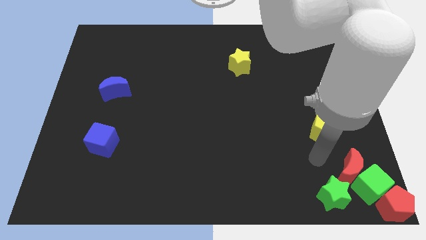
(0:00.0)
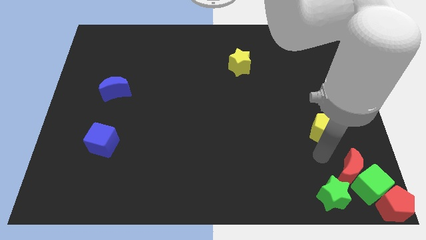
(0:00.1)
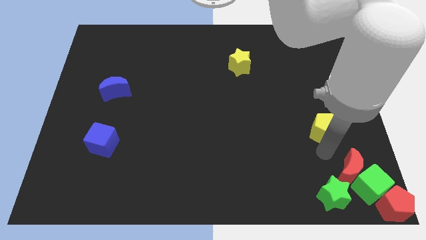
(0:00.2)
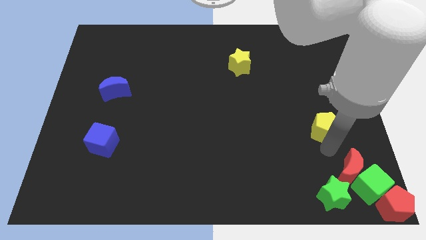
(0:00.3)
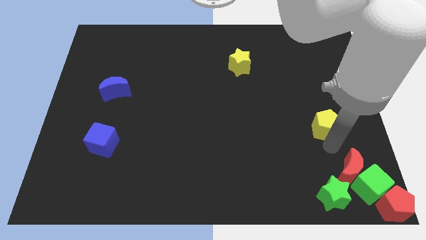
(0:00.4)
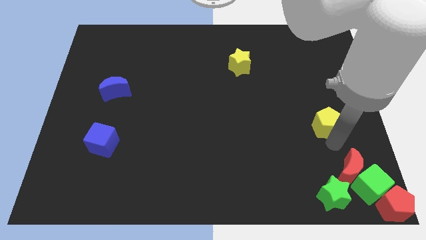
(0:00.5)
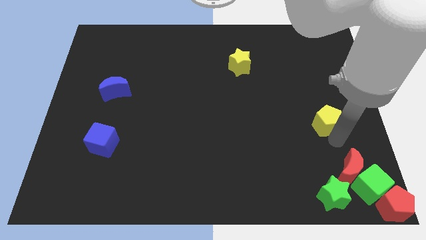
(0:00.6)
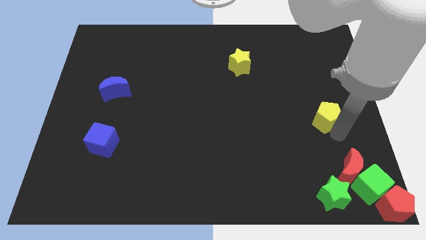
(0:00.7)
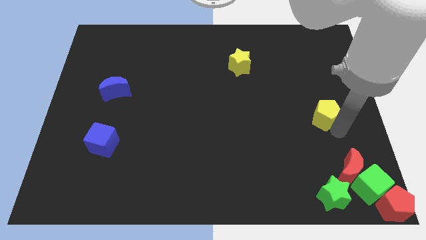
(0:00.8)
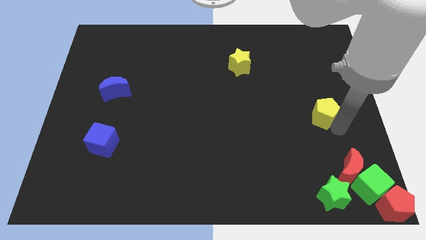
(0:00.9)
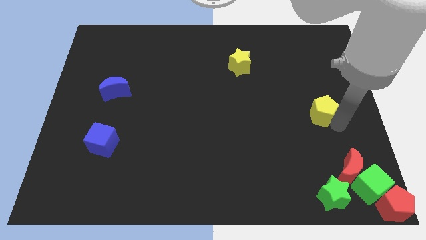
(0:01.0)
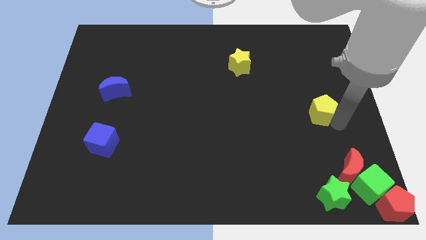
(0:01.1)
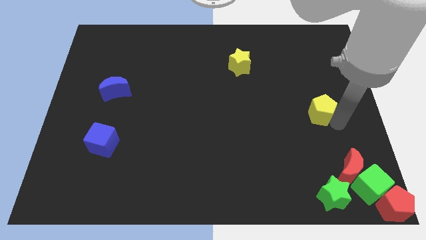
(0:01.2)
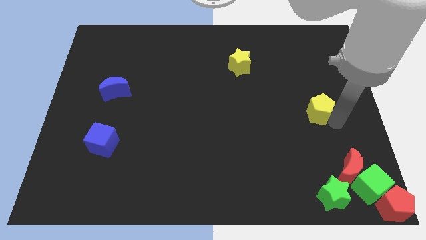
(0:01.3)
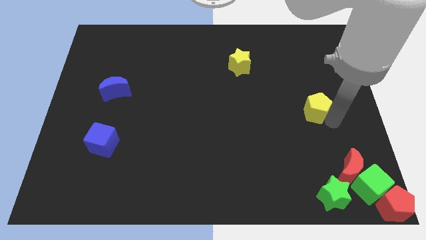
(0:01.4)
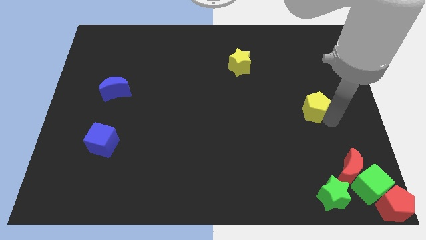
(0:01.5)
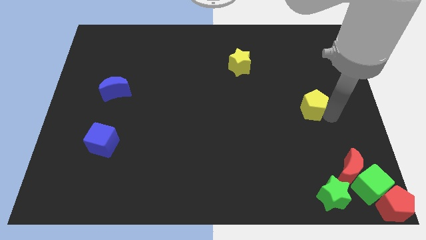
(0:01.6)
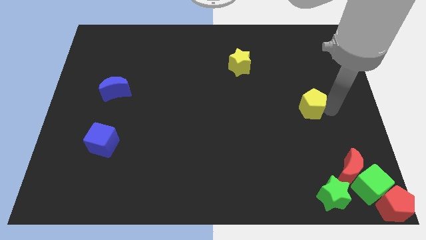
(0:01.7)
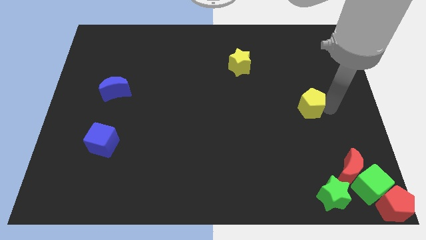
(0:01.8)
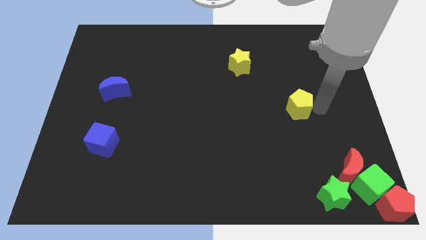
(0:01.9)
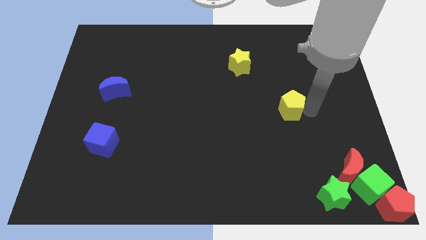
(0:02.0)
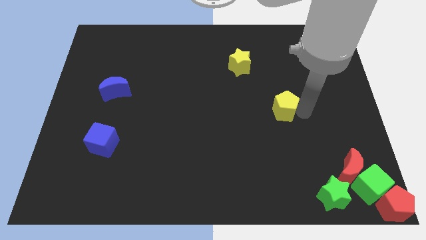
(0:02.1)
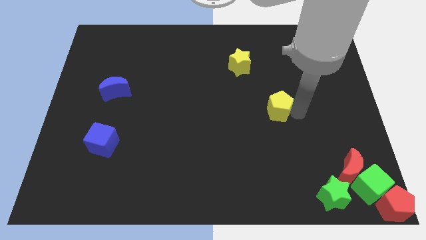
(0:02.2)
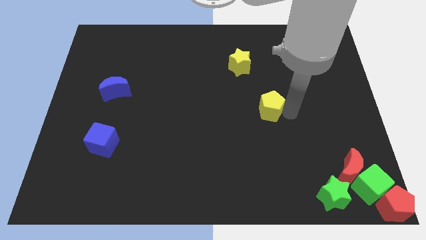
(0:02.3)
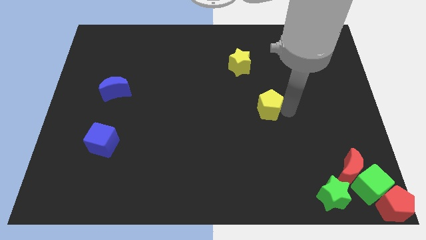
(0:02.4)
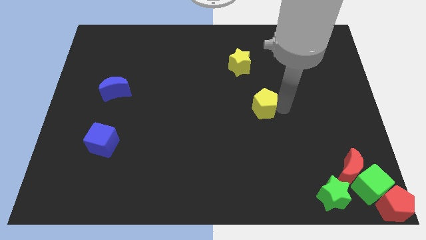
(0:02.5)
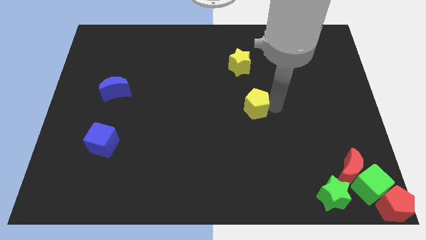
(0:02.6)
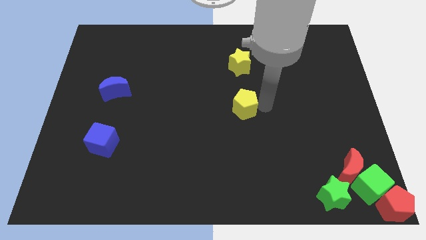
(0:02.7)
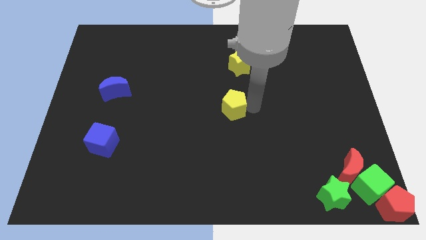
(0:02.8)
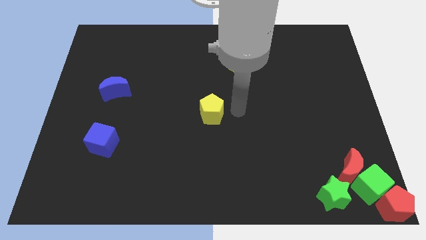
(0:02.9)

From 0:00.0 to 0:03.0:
push the yellow pentagon towards the center of the board

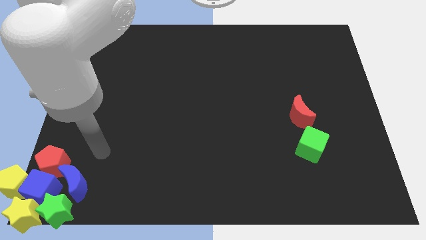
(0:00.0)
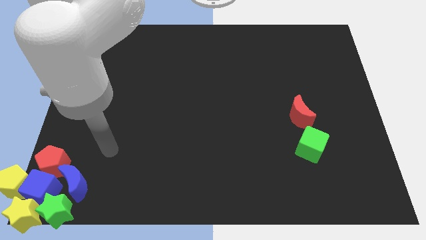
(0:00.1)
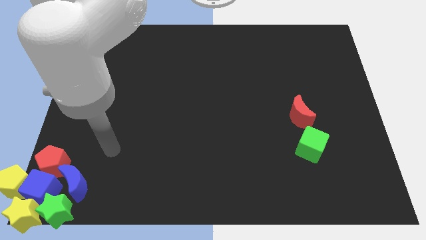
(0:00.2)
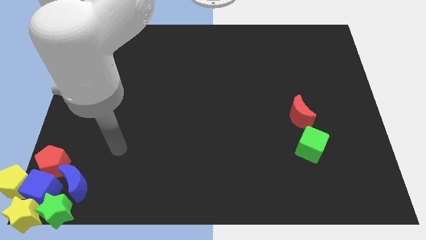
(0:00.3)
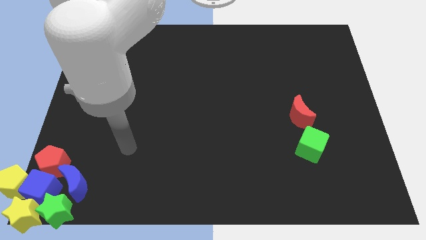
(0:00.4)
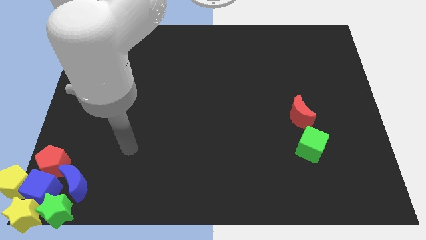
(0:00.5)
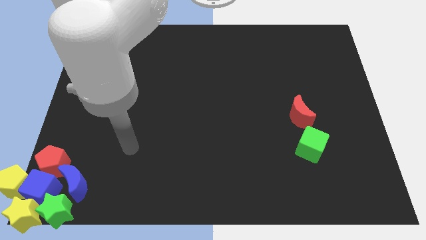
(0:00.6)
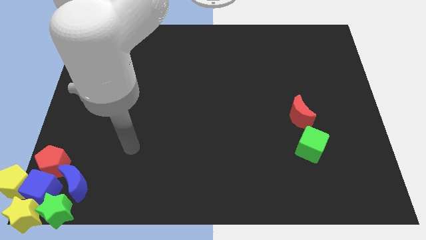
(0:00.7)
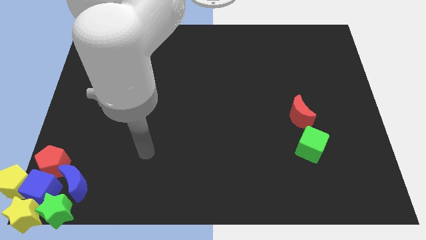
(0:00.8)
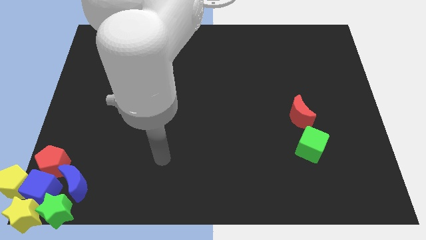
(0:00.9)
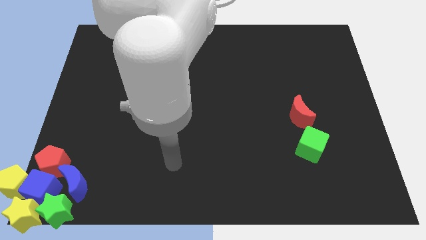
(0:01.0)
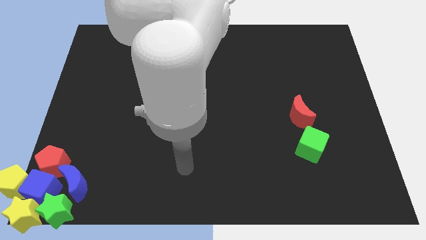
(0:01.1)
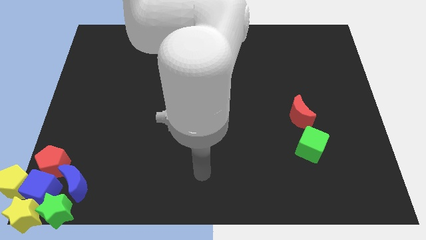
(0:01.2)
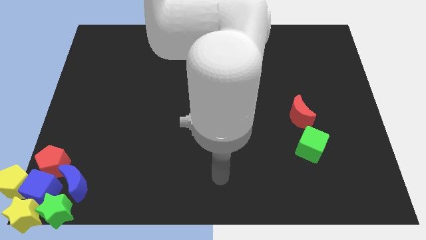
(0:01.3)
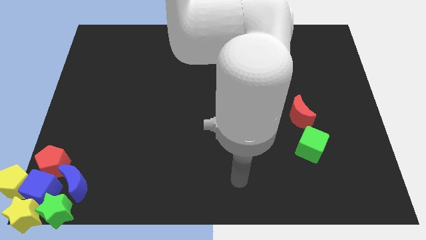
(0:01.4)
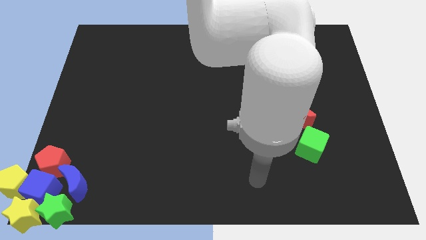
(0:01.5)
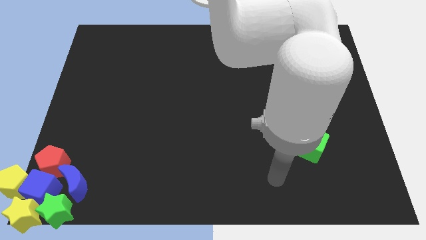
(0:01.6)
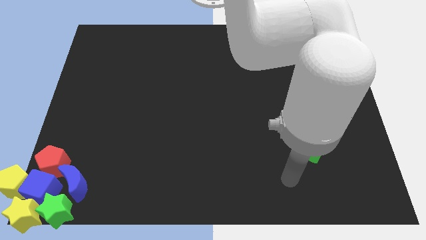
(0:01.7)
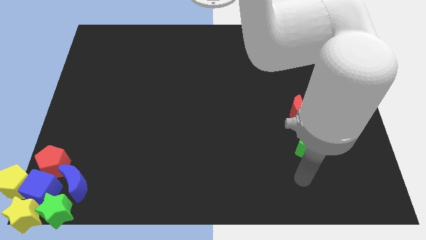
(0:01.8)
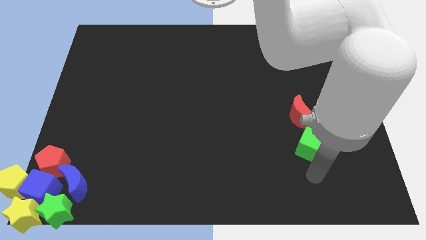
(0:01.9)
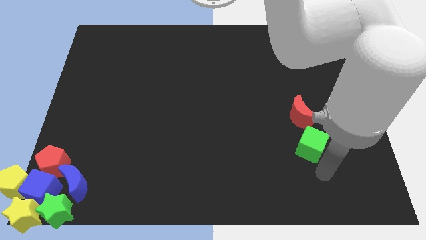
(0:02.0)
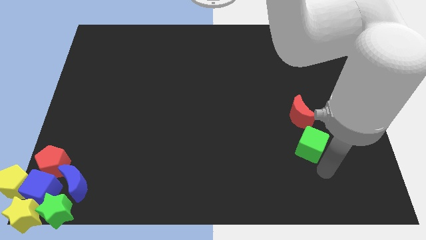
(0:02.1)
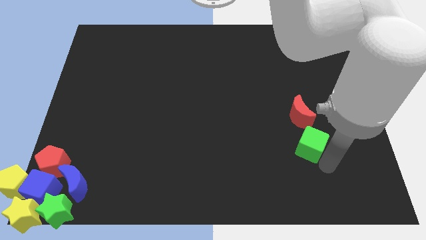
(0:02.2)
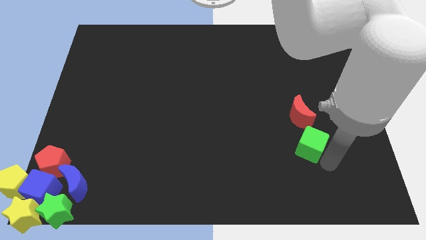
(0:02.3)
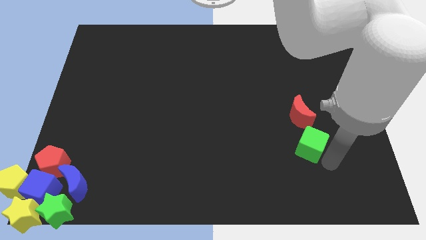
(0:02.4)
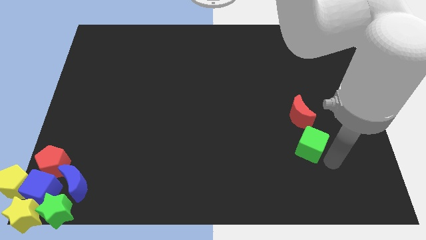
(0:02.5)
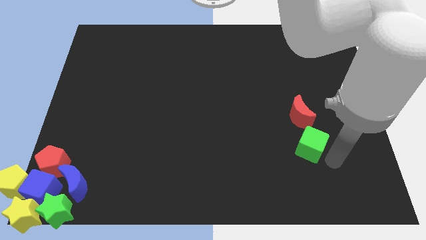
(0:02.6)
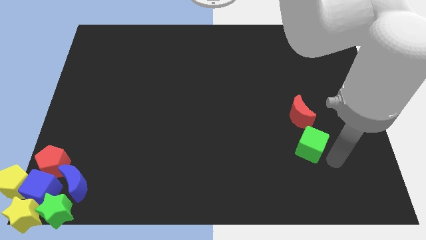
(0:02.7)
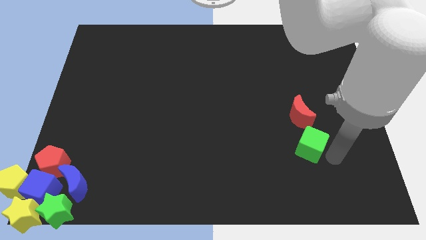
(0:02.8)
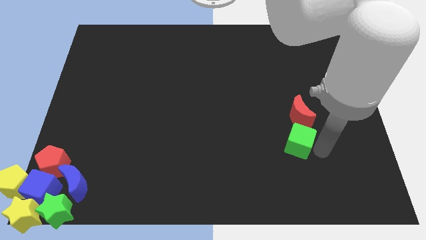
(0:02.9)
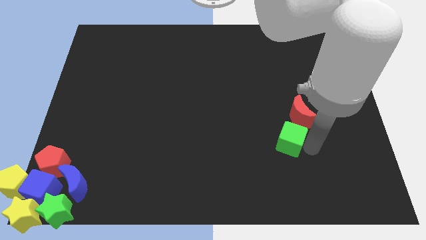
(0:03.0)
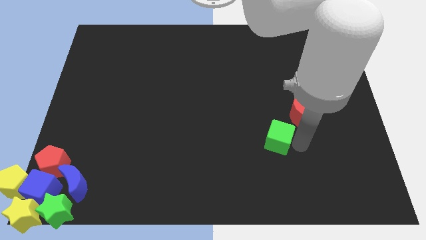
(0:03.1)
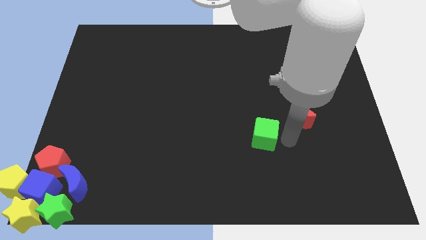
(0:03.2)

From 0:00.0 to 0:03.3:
place the green cube parallel to red moon

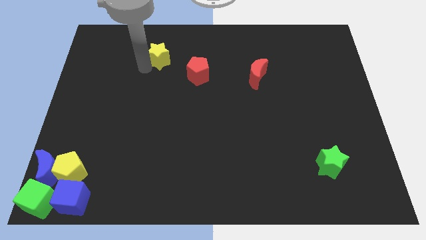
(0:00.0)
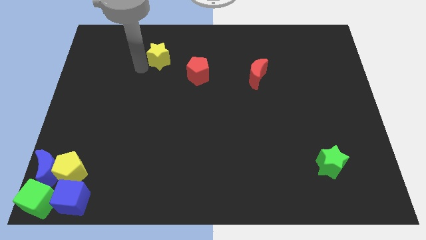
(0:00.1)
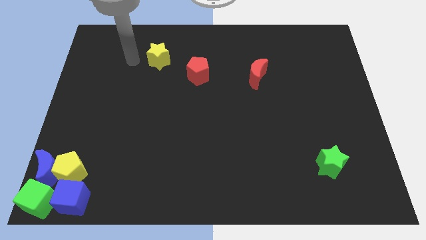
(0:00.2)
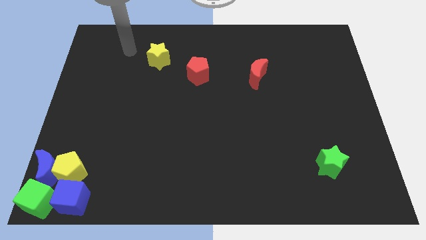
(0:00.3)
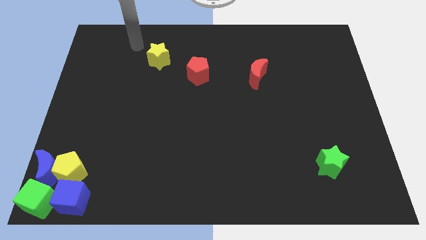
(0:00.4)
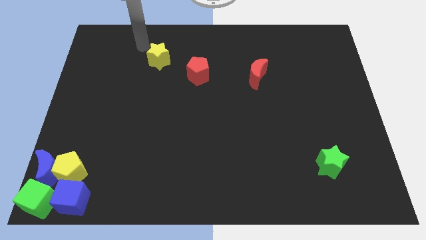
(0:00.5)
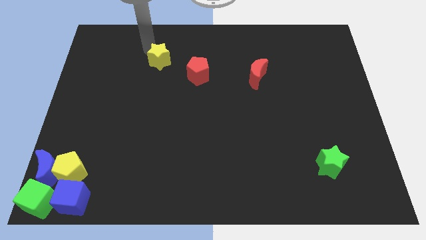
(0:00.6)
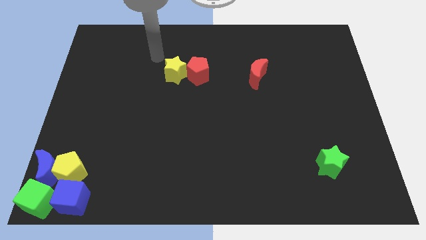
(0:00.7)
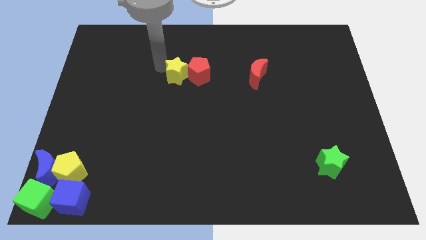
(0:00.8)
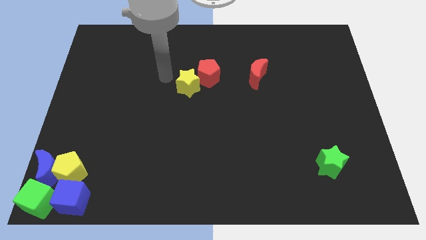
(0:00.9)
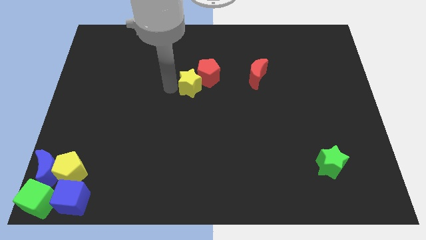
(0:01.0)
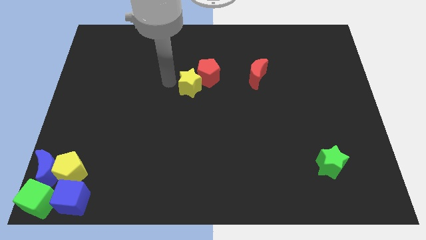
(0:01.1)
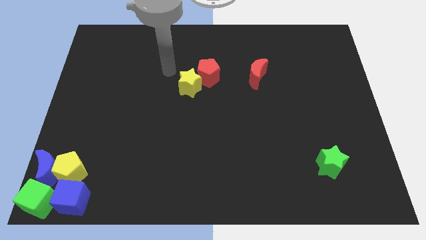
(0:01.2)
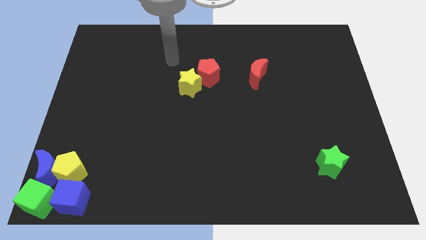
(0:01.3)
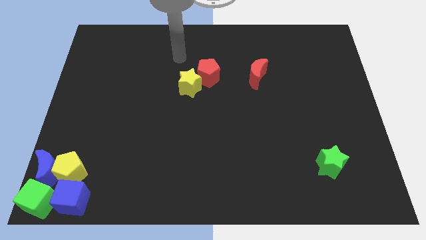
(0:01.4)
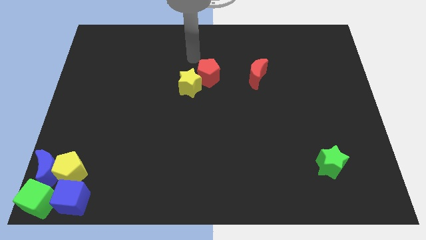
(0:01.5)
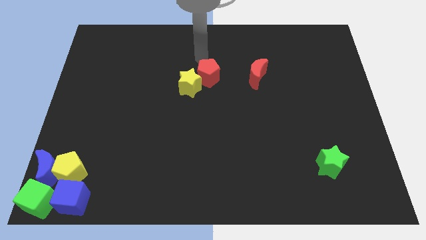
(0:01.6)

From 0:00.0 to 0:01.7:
push the yellow star into the red pentagon

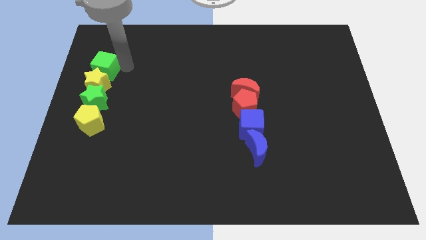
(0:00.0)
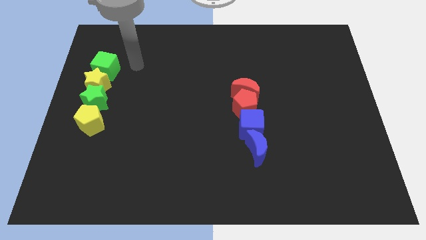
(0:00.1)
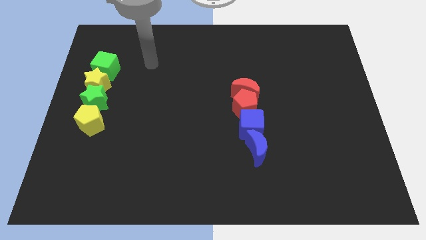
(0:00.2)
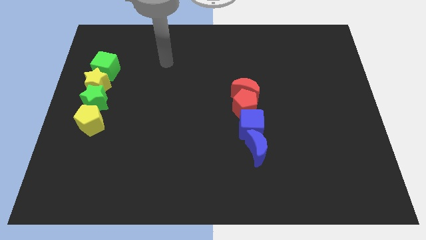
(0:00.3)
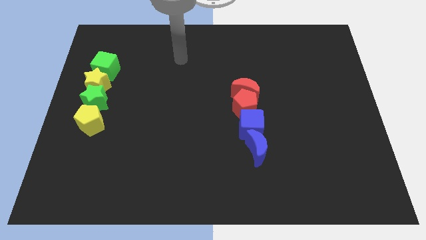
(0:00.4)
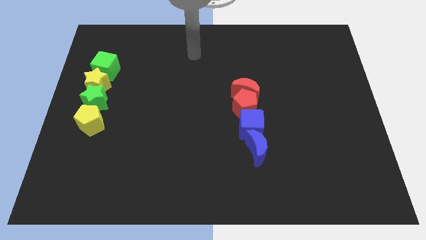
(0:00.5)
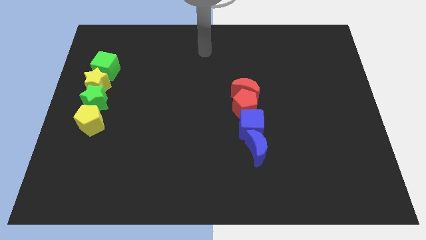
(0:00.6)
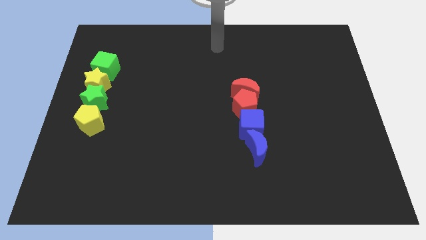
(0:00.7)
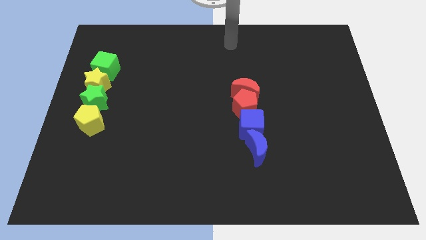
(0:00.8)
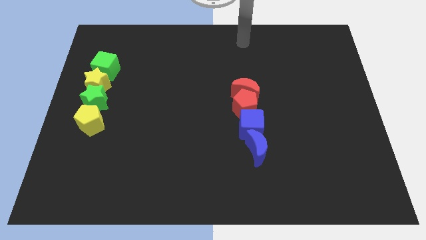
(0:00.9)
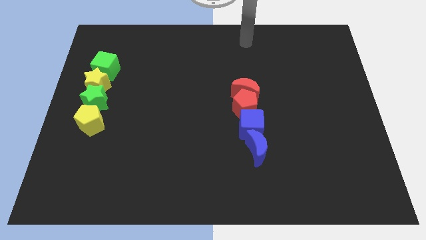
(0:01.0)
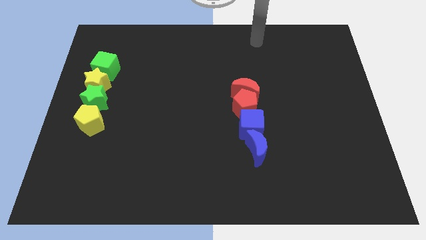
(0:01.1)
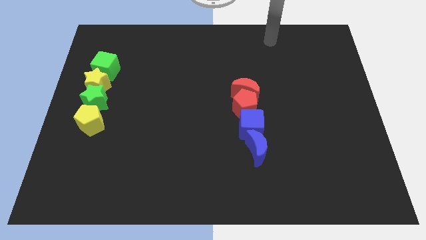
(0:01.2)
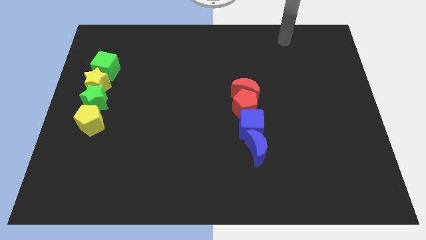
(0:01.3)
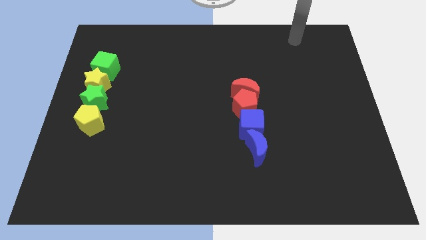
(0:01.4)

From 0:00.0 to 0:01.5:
move your arm away from the green cube
